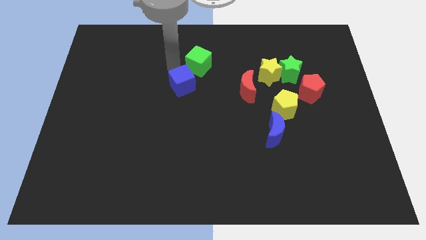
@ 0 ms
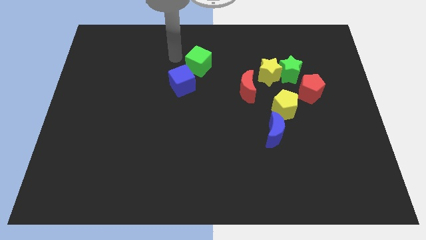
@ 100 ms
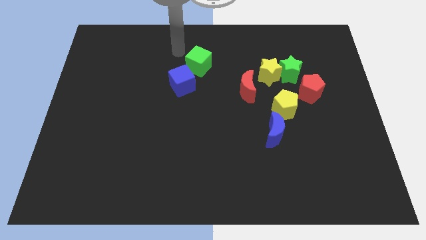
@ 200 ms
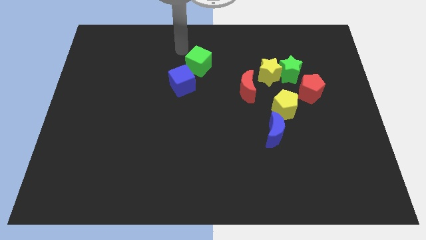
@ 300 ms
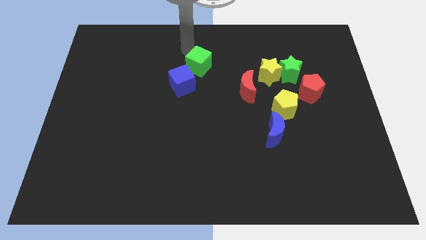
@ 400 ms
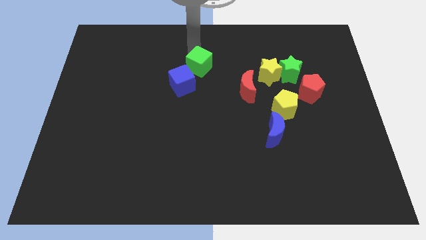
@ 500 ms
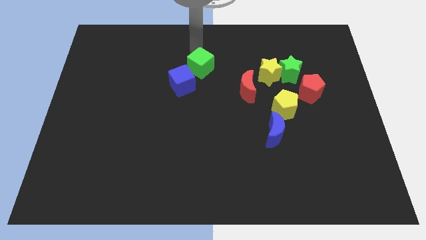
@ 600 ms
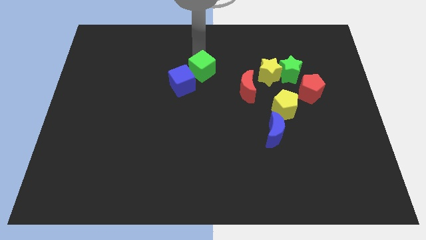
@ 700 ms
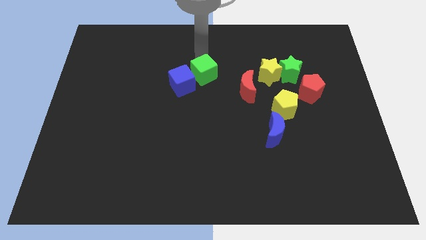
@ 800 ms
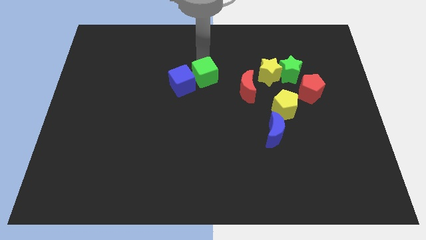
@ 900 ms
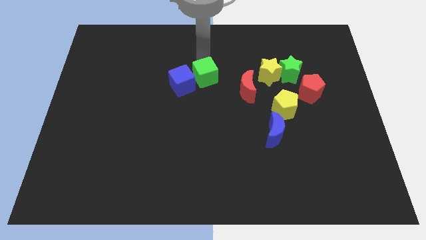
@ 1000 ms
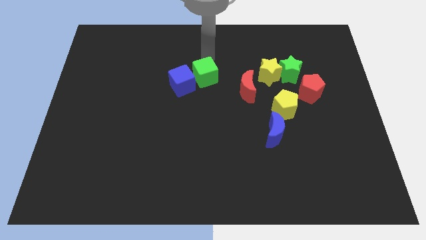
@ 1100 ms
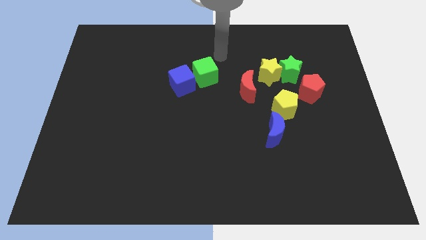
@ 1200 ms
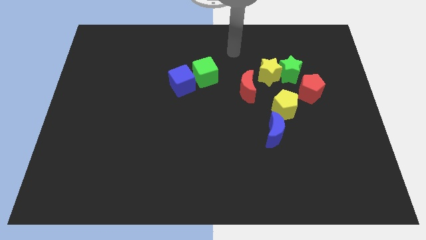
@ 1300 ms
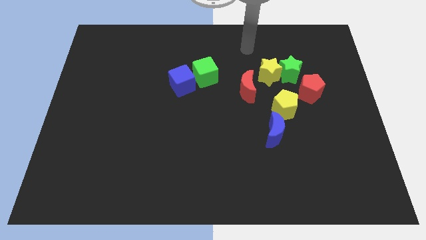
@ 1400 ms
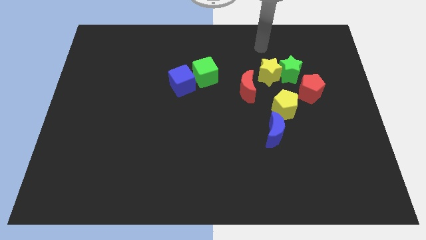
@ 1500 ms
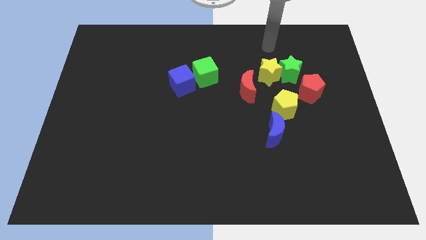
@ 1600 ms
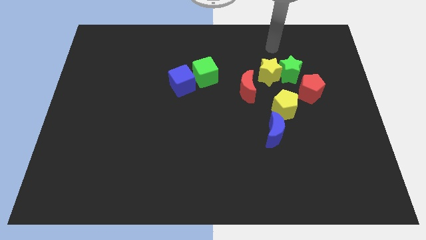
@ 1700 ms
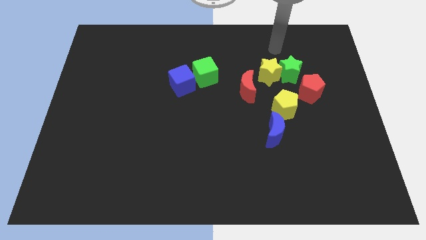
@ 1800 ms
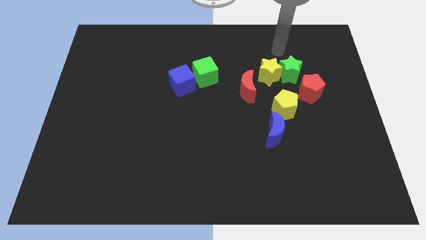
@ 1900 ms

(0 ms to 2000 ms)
move green cube slightly to the center of the board

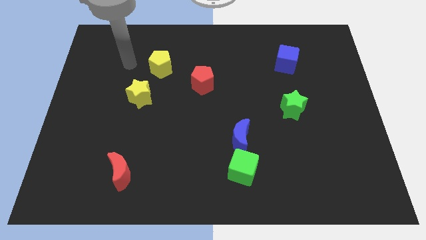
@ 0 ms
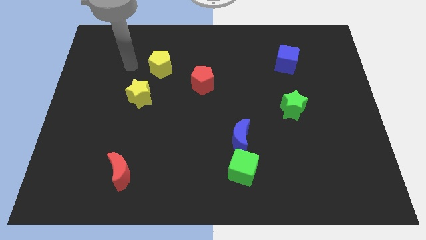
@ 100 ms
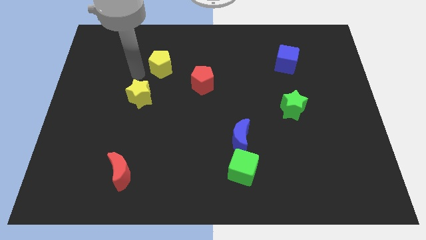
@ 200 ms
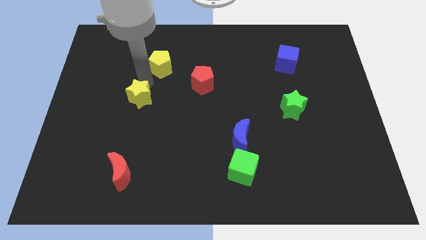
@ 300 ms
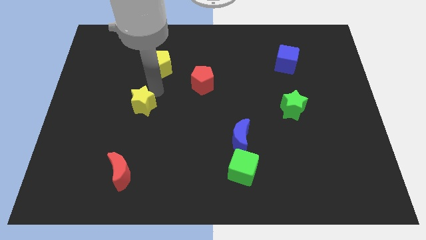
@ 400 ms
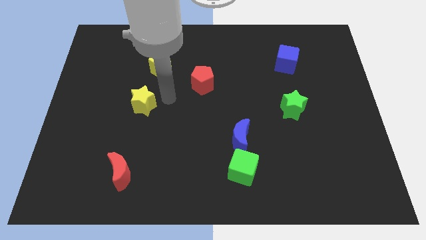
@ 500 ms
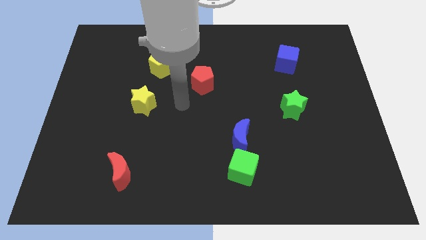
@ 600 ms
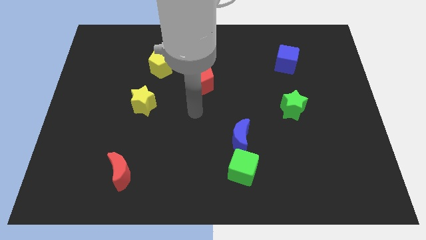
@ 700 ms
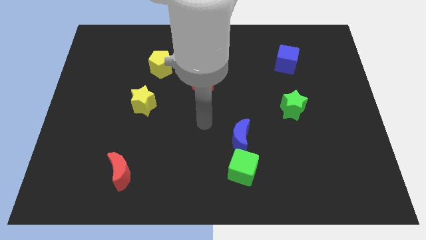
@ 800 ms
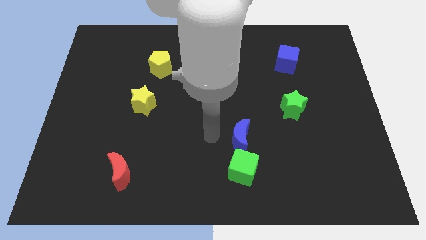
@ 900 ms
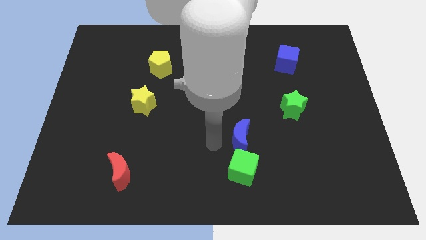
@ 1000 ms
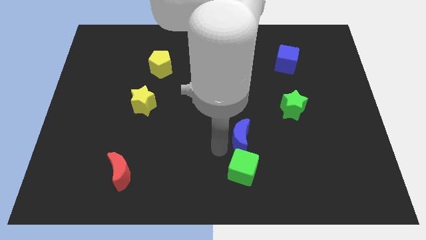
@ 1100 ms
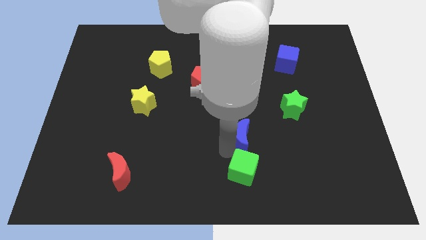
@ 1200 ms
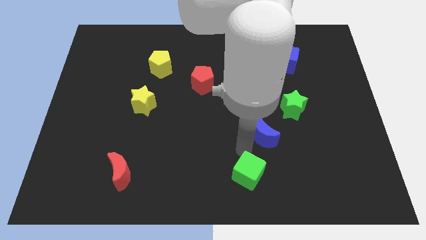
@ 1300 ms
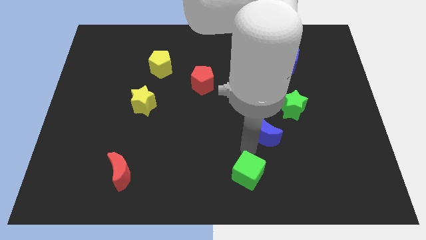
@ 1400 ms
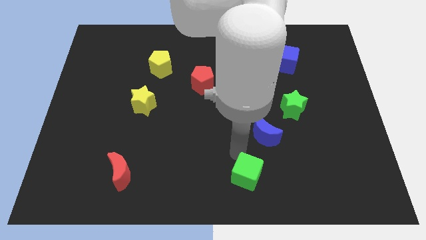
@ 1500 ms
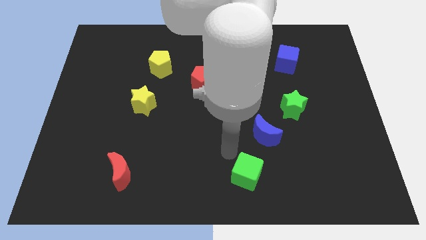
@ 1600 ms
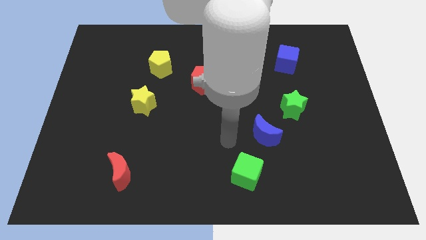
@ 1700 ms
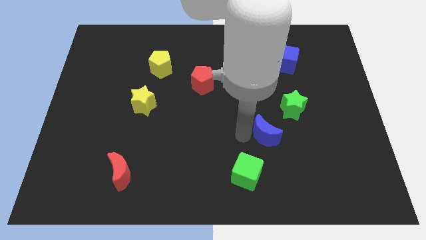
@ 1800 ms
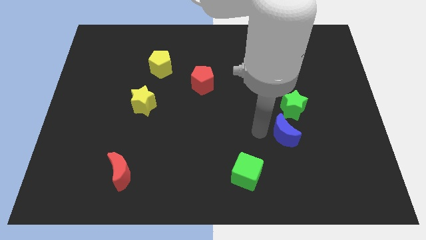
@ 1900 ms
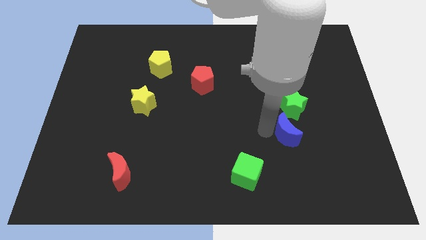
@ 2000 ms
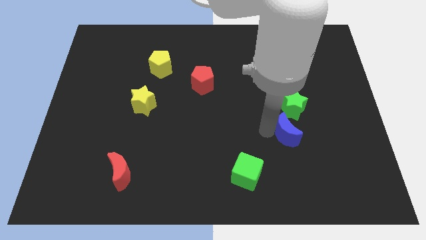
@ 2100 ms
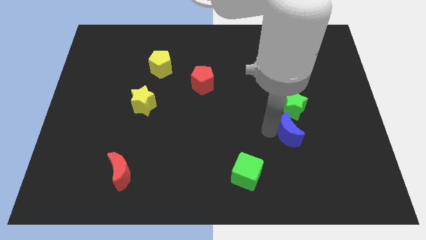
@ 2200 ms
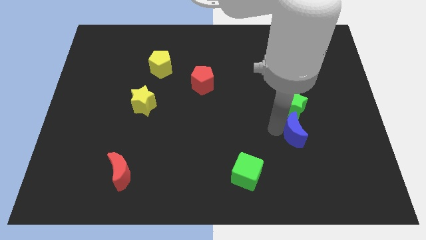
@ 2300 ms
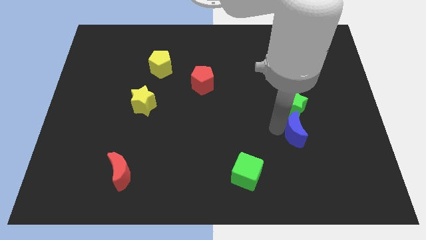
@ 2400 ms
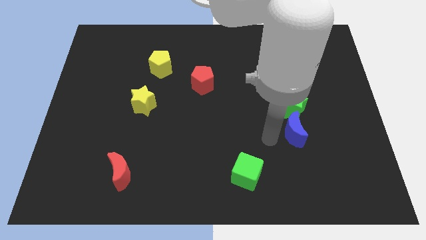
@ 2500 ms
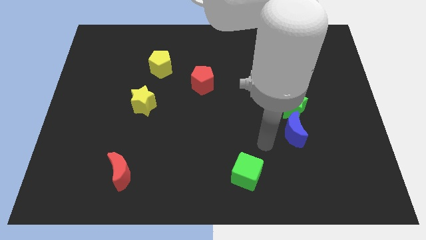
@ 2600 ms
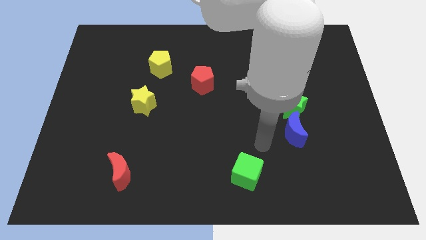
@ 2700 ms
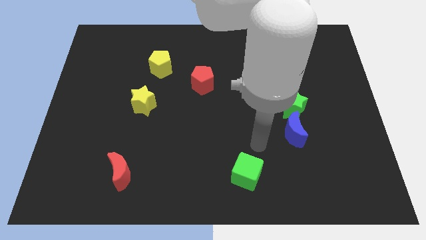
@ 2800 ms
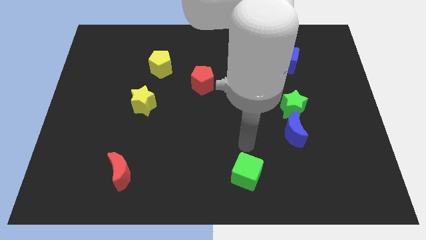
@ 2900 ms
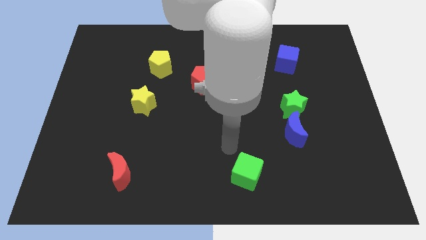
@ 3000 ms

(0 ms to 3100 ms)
move blue crescent to the bottom of green star

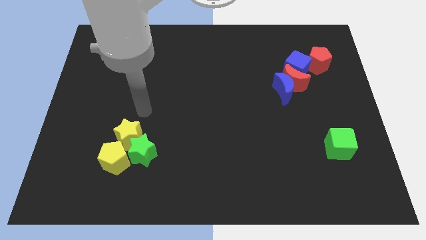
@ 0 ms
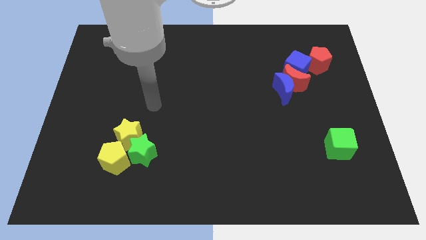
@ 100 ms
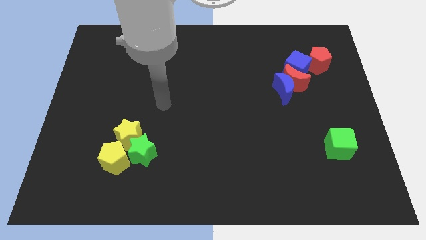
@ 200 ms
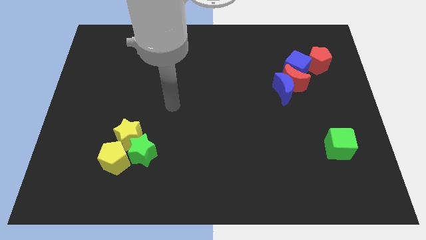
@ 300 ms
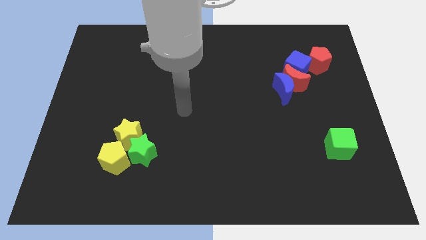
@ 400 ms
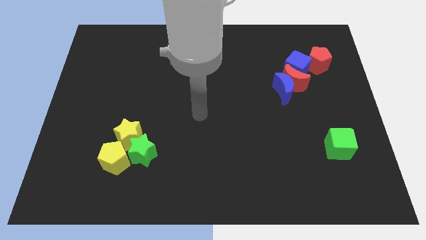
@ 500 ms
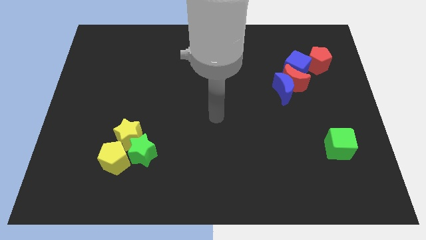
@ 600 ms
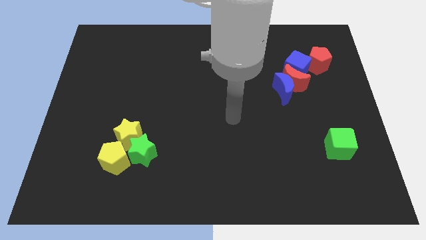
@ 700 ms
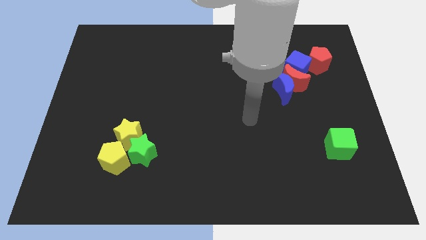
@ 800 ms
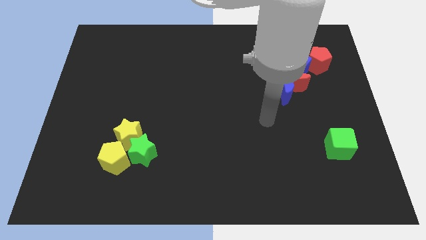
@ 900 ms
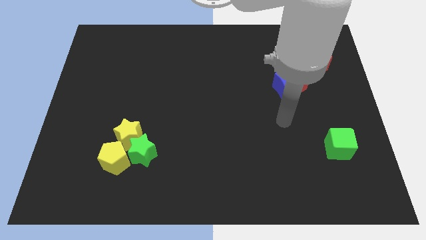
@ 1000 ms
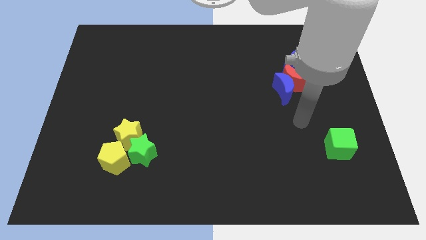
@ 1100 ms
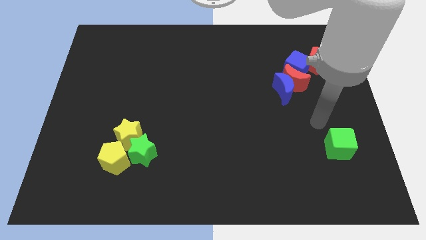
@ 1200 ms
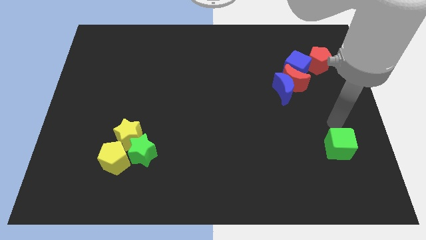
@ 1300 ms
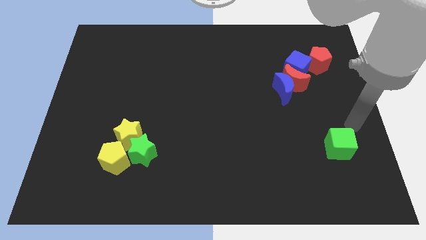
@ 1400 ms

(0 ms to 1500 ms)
move your arm to the top side of the green cube

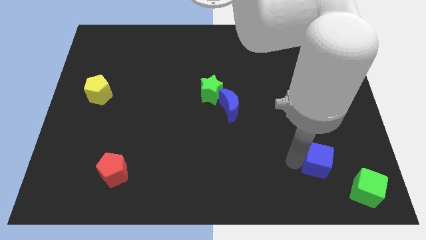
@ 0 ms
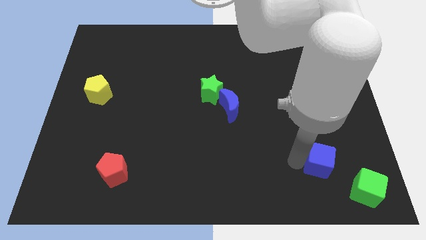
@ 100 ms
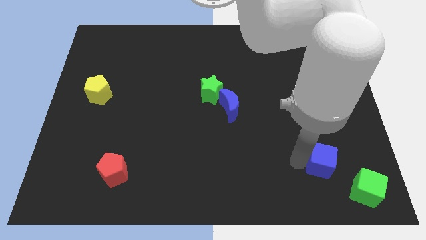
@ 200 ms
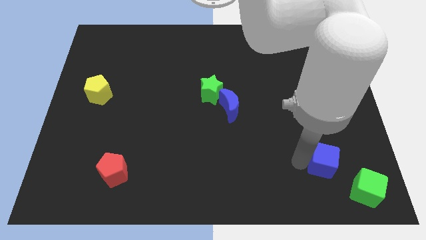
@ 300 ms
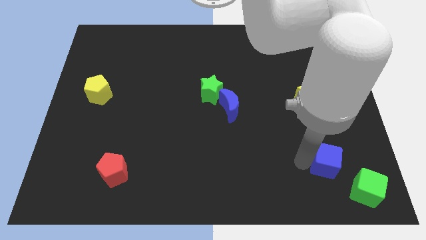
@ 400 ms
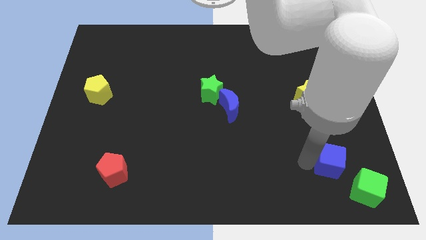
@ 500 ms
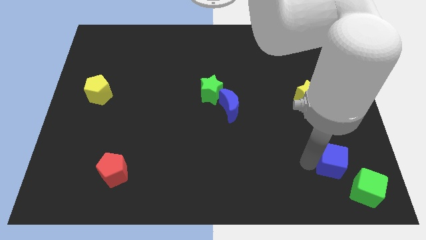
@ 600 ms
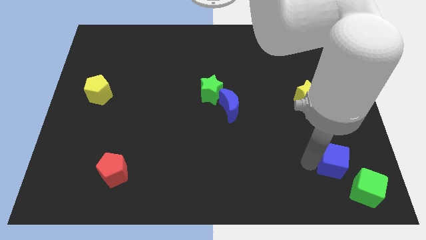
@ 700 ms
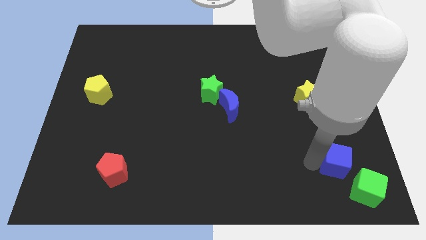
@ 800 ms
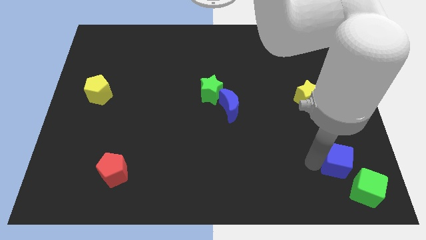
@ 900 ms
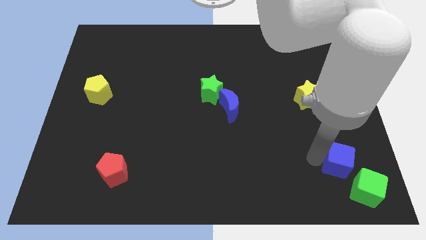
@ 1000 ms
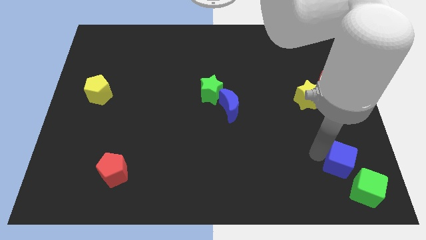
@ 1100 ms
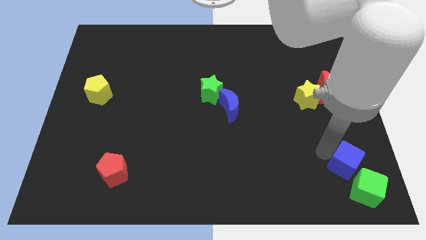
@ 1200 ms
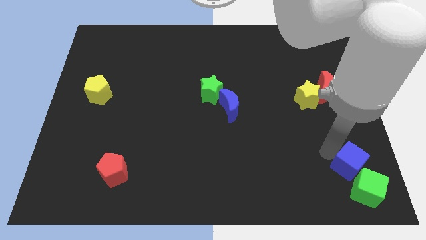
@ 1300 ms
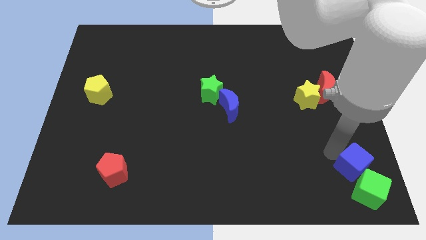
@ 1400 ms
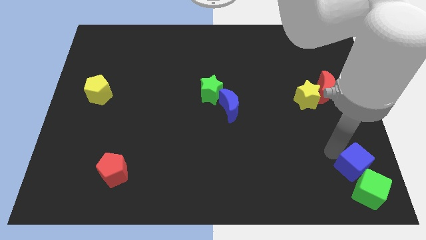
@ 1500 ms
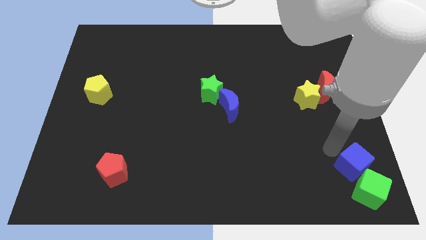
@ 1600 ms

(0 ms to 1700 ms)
push the blue cube into the green cube

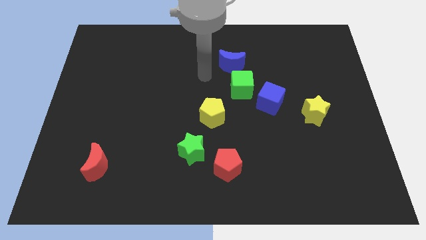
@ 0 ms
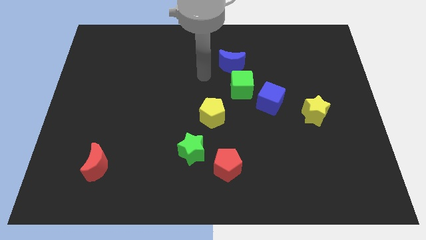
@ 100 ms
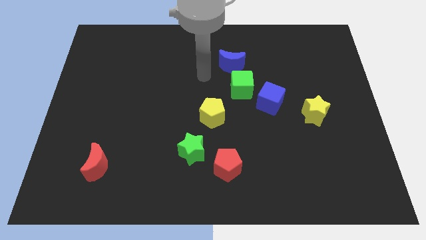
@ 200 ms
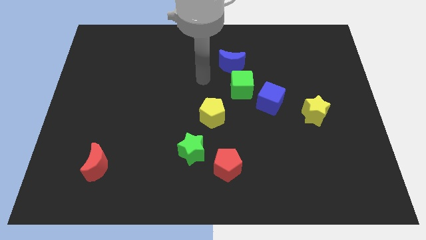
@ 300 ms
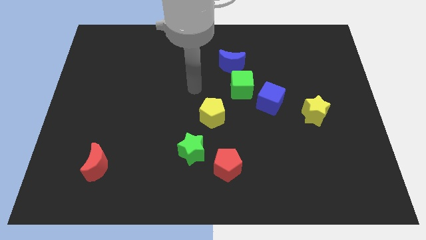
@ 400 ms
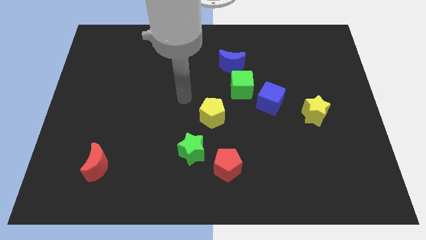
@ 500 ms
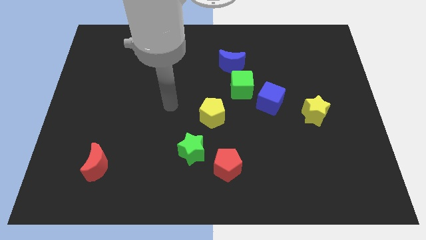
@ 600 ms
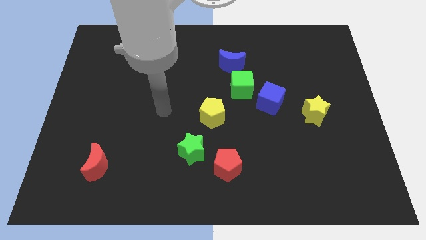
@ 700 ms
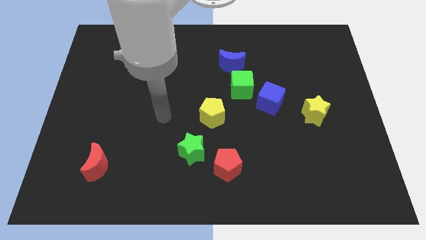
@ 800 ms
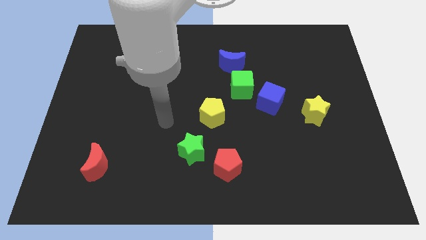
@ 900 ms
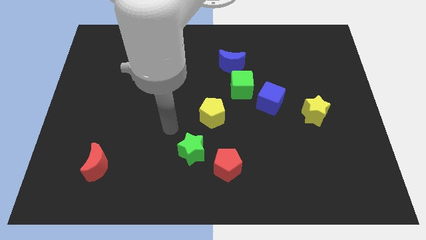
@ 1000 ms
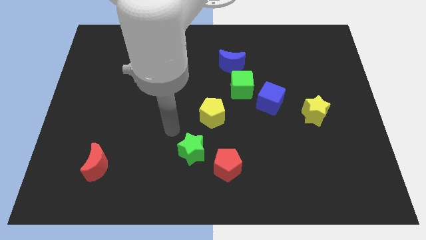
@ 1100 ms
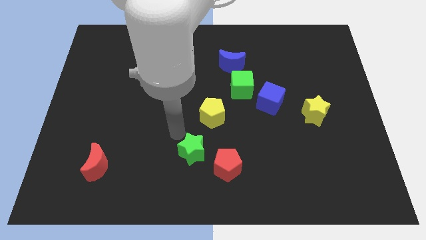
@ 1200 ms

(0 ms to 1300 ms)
move your arm towards the green star
